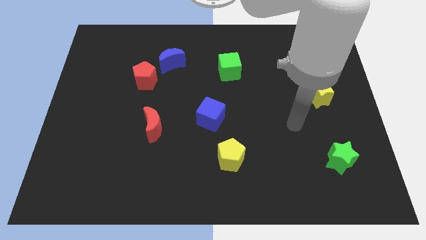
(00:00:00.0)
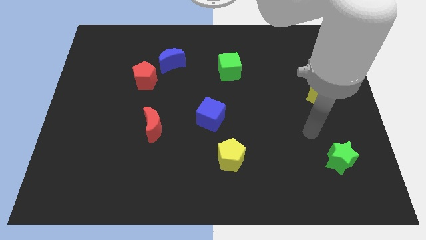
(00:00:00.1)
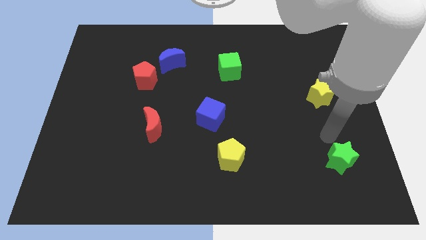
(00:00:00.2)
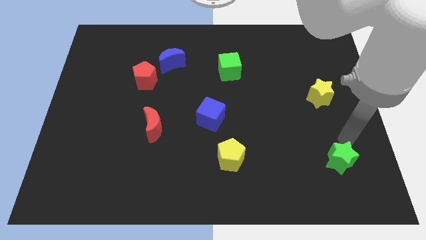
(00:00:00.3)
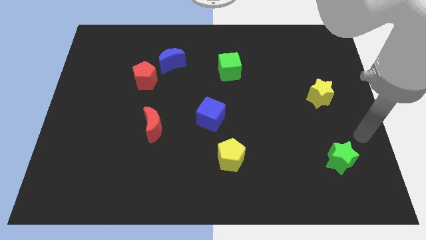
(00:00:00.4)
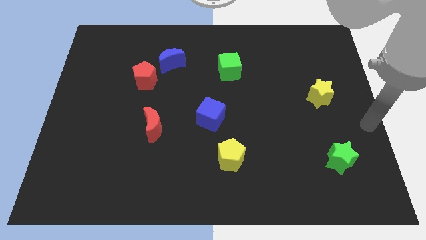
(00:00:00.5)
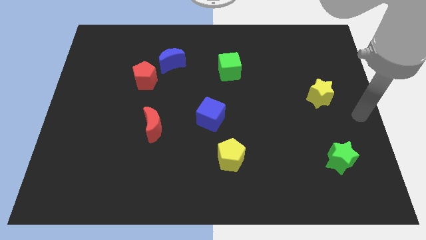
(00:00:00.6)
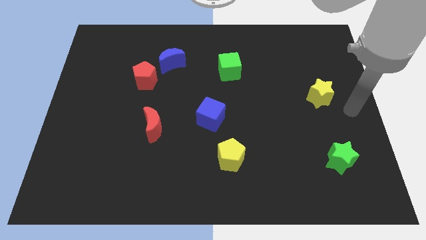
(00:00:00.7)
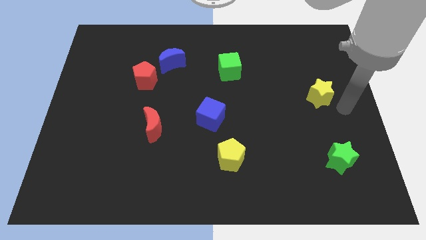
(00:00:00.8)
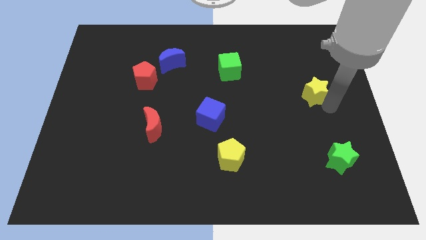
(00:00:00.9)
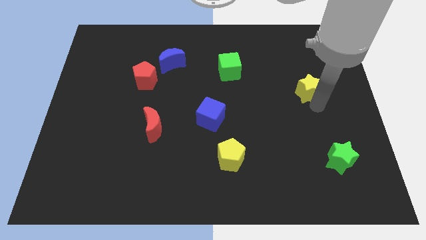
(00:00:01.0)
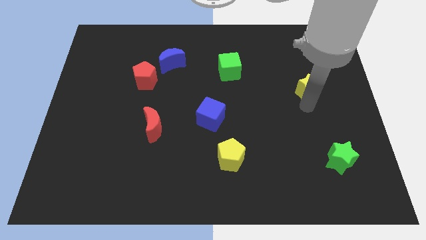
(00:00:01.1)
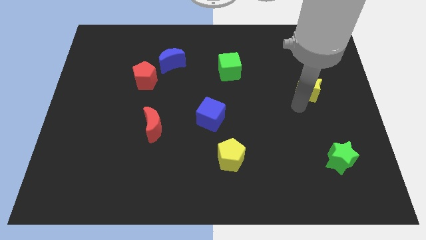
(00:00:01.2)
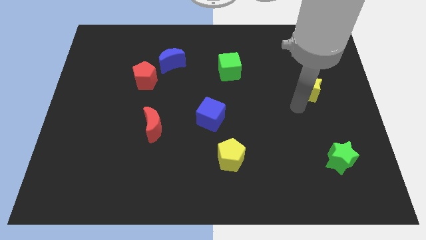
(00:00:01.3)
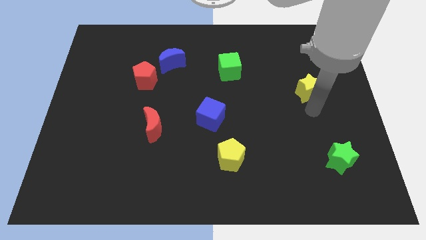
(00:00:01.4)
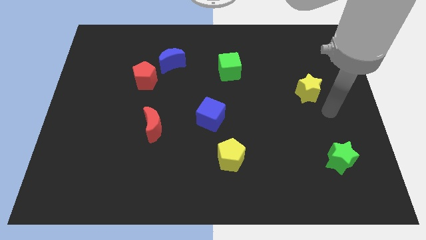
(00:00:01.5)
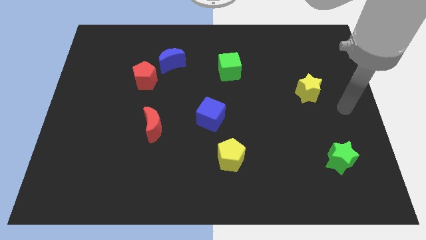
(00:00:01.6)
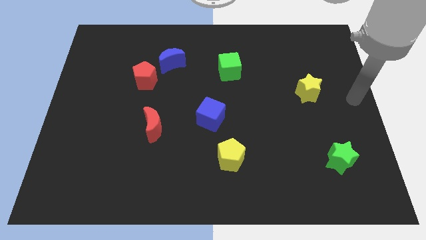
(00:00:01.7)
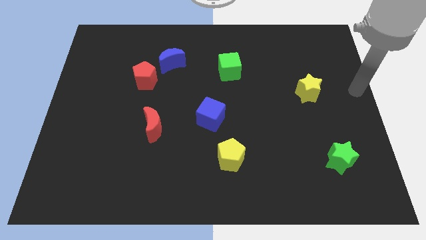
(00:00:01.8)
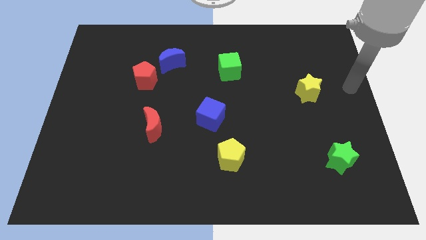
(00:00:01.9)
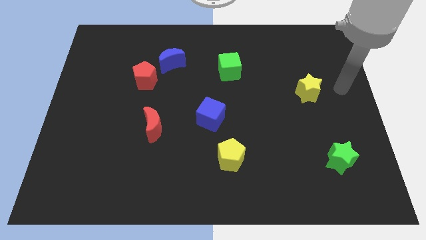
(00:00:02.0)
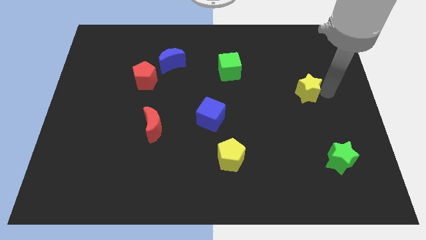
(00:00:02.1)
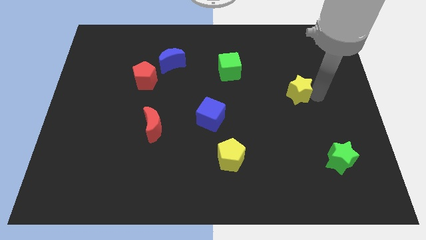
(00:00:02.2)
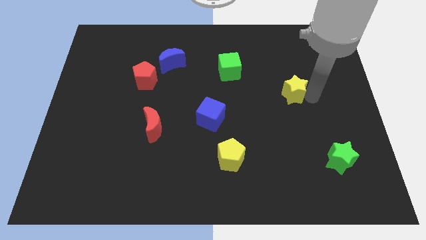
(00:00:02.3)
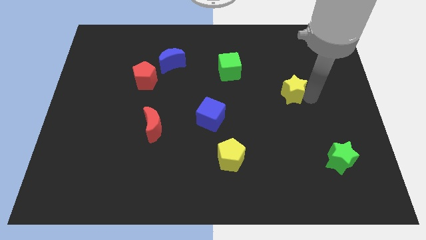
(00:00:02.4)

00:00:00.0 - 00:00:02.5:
push yellow star slightly towards left side

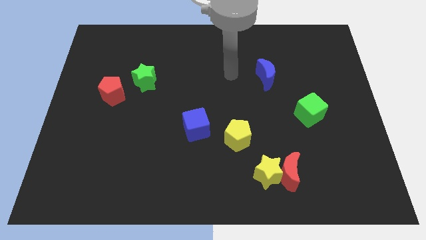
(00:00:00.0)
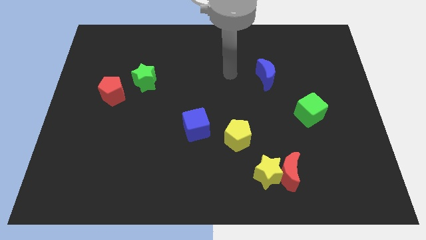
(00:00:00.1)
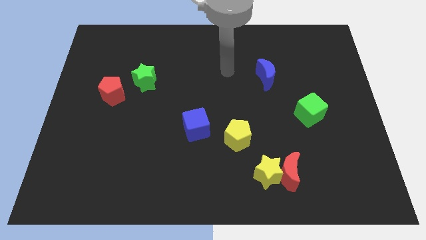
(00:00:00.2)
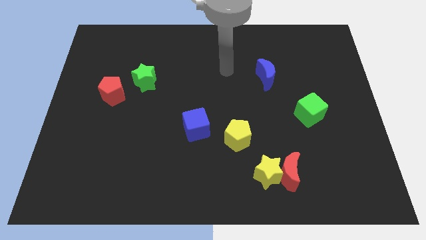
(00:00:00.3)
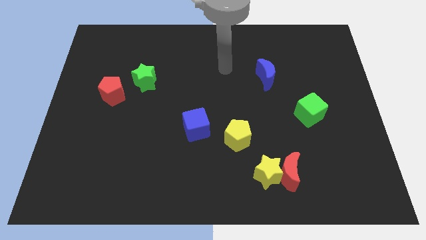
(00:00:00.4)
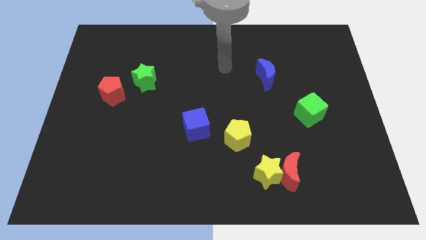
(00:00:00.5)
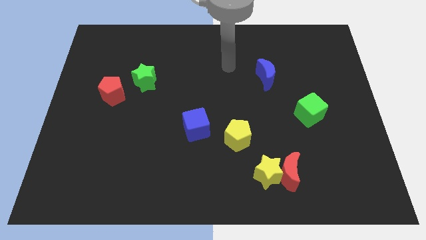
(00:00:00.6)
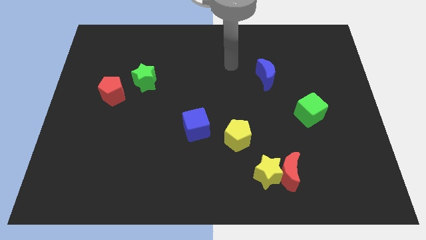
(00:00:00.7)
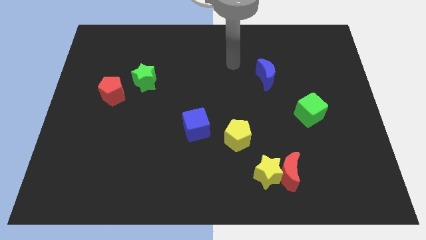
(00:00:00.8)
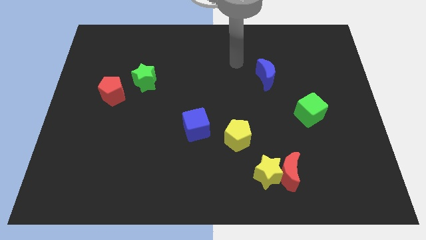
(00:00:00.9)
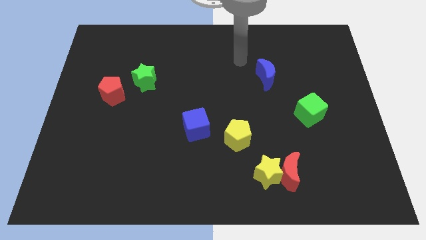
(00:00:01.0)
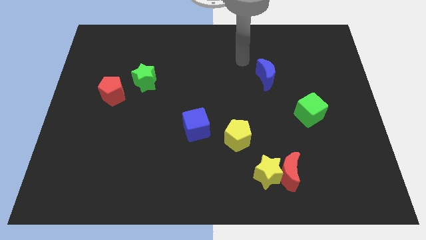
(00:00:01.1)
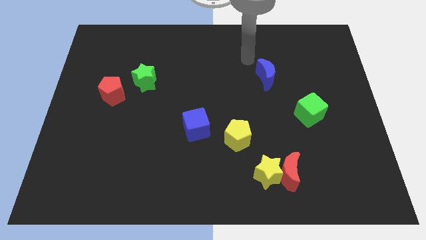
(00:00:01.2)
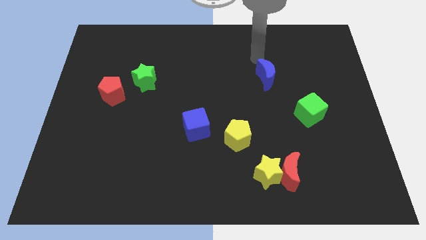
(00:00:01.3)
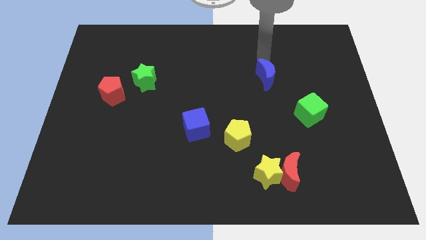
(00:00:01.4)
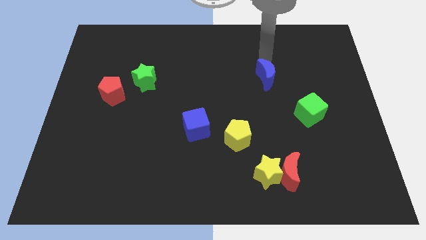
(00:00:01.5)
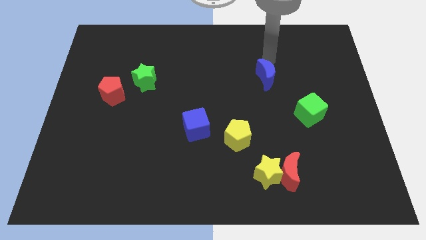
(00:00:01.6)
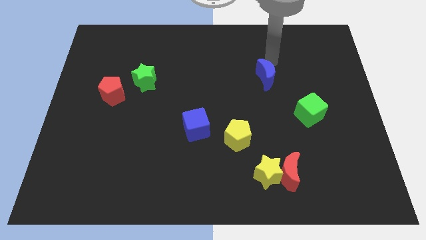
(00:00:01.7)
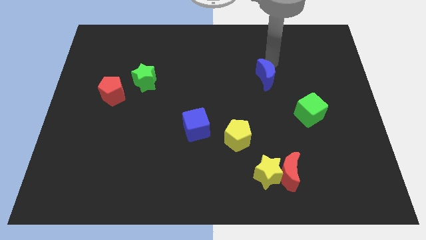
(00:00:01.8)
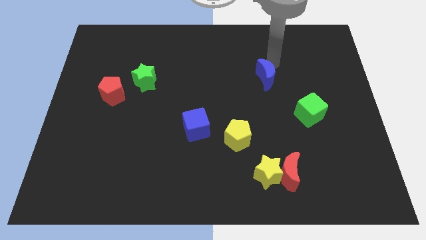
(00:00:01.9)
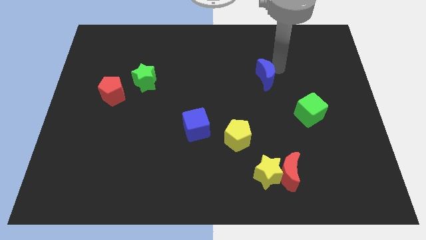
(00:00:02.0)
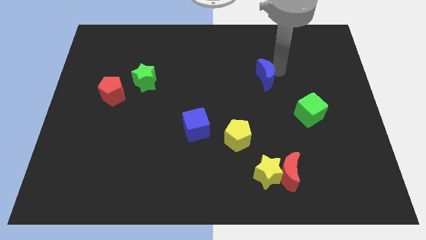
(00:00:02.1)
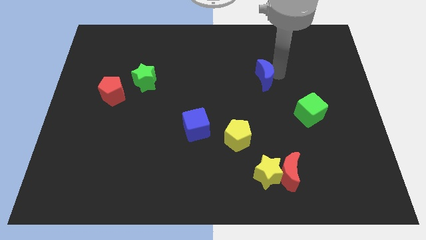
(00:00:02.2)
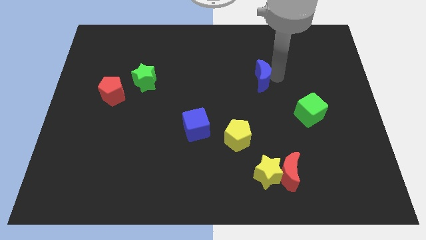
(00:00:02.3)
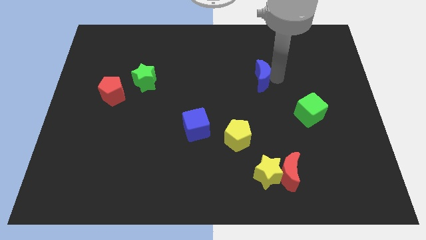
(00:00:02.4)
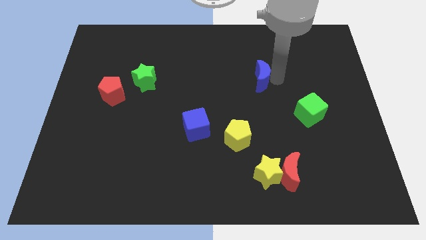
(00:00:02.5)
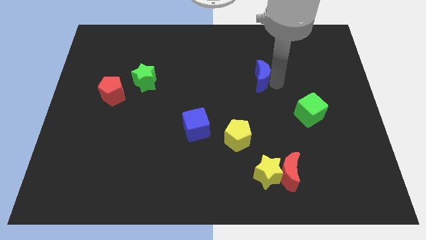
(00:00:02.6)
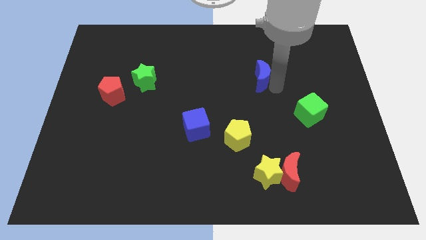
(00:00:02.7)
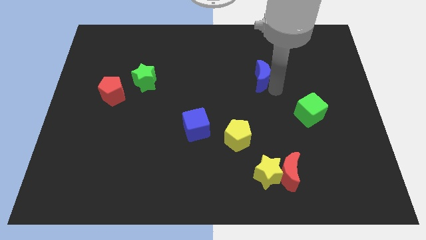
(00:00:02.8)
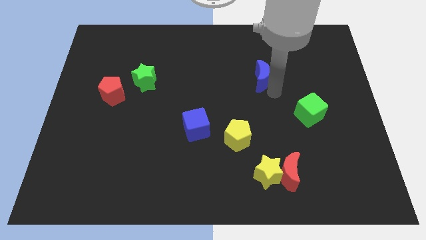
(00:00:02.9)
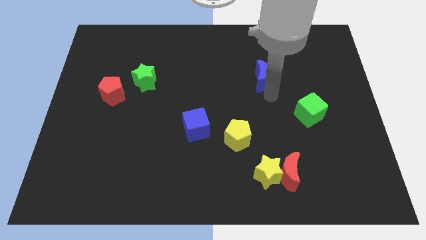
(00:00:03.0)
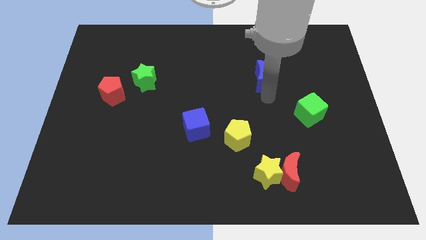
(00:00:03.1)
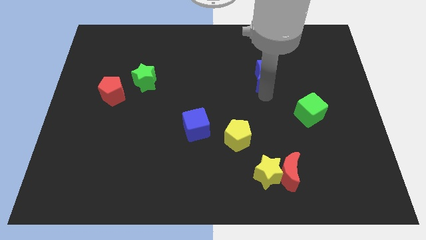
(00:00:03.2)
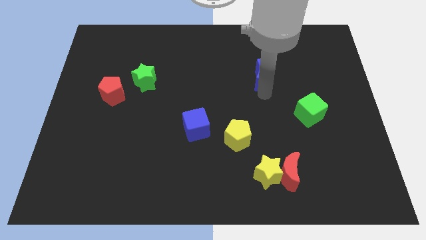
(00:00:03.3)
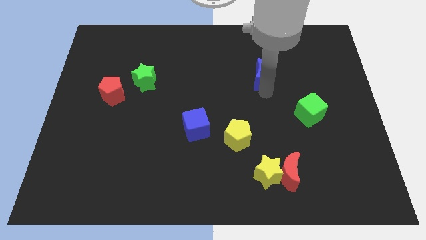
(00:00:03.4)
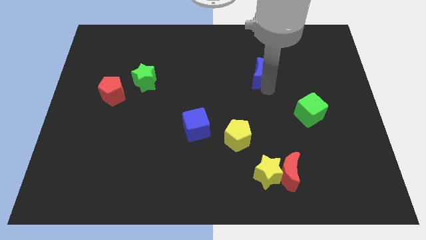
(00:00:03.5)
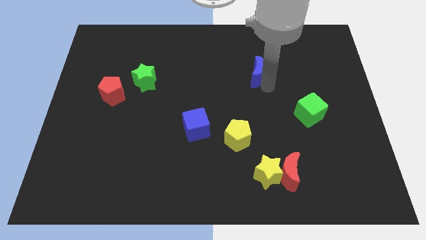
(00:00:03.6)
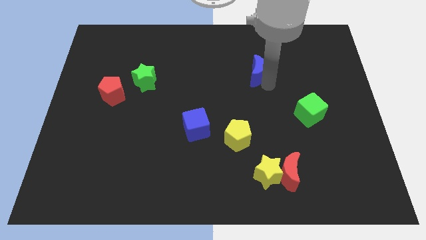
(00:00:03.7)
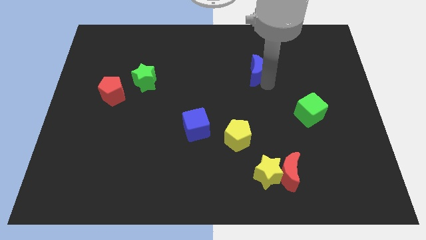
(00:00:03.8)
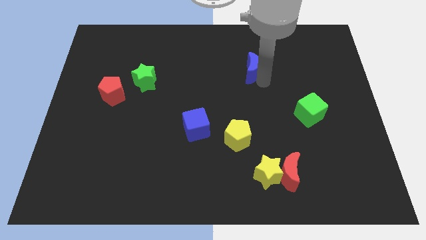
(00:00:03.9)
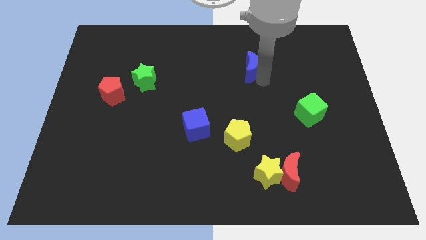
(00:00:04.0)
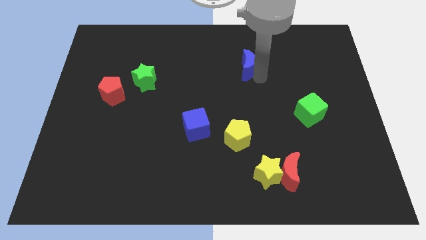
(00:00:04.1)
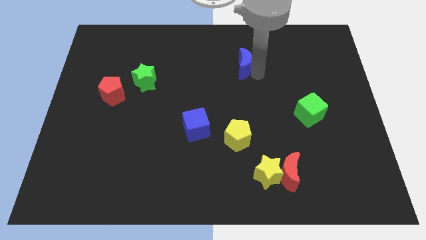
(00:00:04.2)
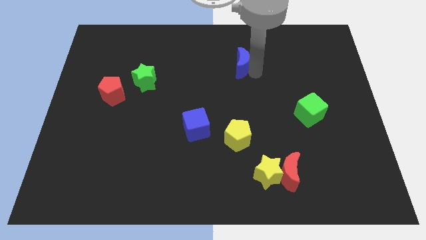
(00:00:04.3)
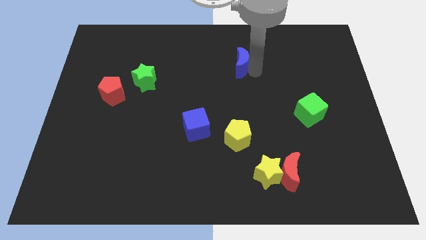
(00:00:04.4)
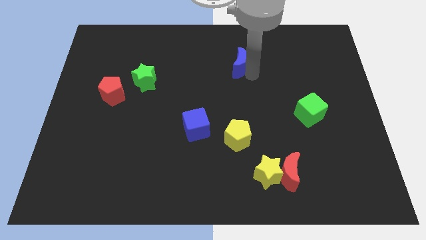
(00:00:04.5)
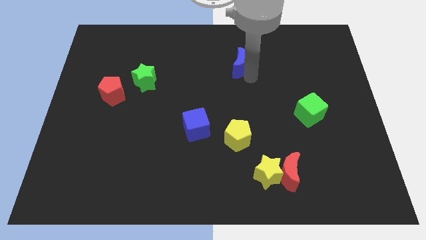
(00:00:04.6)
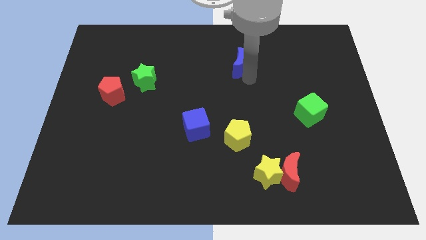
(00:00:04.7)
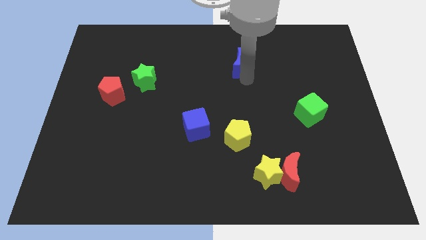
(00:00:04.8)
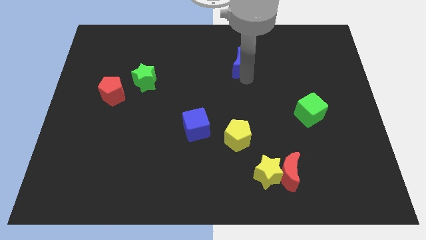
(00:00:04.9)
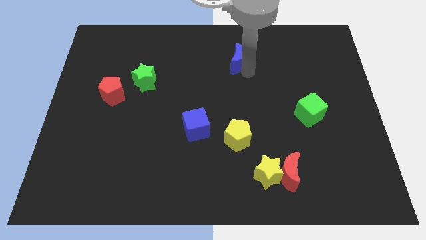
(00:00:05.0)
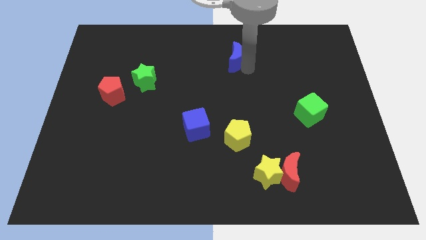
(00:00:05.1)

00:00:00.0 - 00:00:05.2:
move the blue crescent vertically above the yellow pentagon

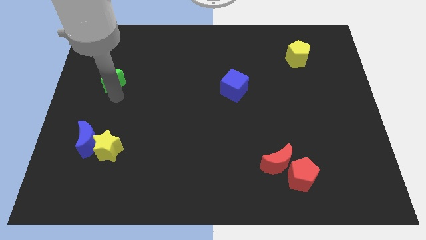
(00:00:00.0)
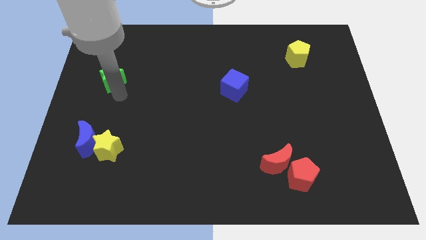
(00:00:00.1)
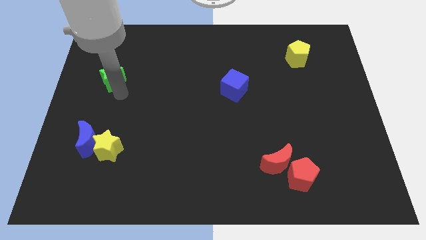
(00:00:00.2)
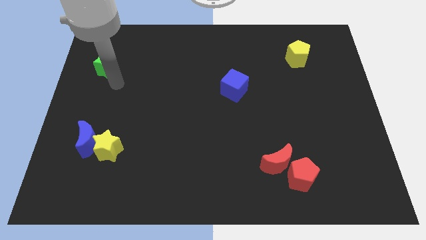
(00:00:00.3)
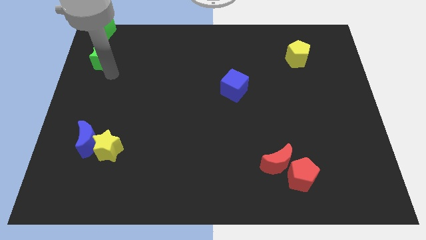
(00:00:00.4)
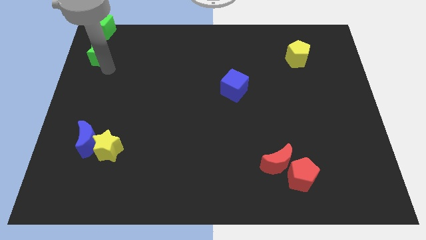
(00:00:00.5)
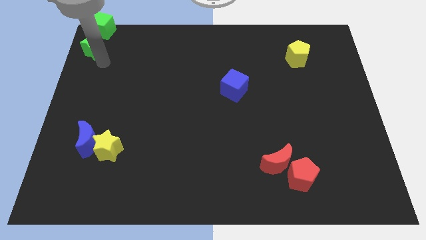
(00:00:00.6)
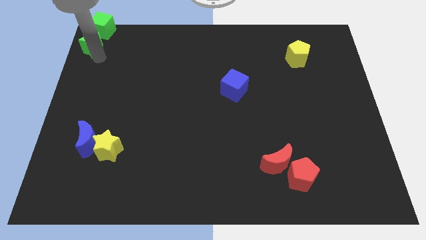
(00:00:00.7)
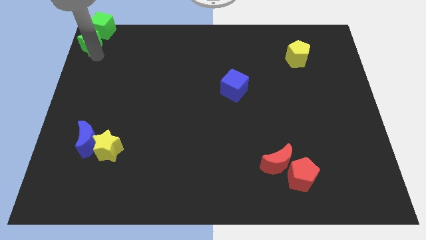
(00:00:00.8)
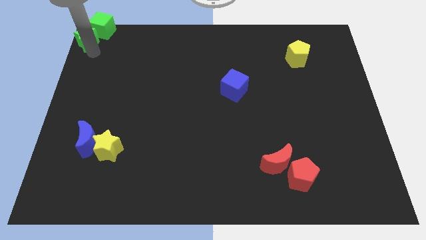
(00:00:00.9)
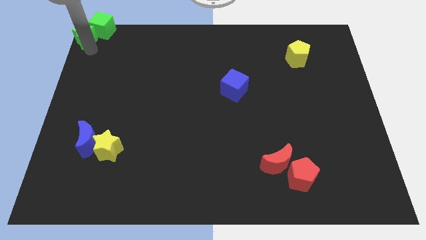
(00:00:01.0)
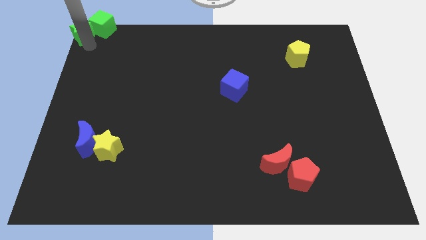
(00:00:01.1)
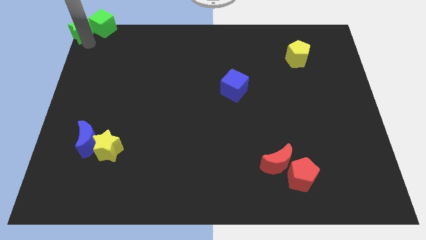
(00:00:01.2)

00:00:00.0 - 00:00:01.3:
place the green star close to the green cube
